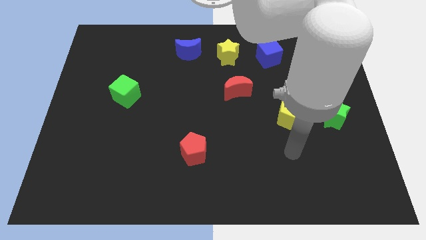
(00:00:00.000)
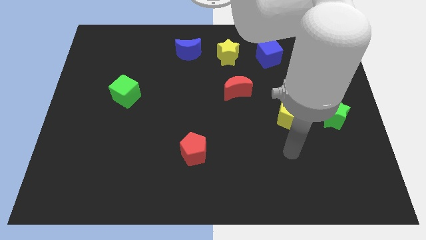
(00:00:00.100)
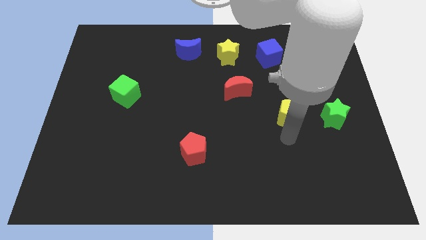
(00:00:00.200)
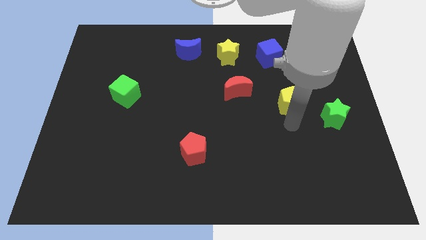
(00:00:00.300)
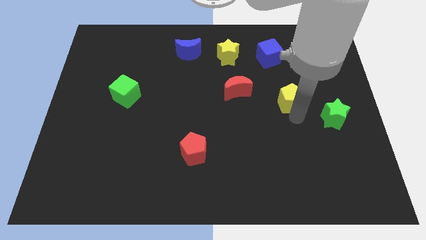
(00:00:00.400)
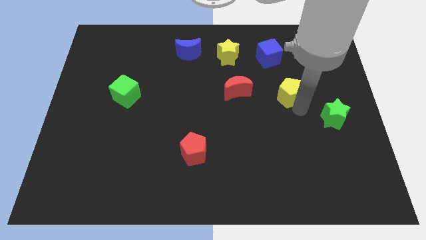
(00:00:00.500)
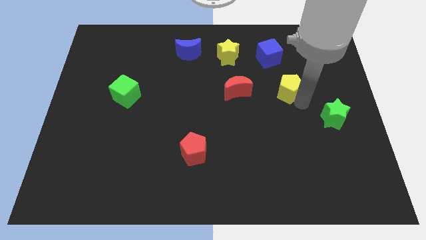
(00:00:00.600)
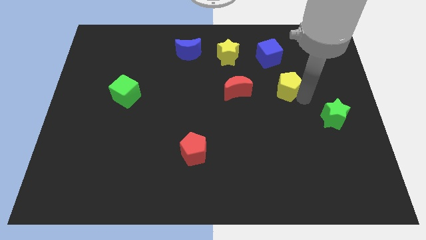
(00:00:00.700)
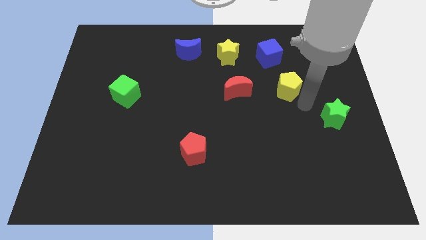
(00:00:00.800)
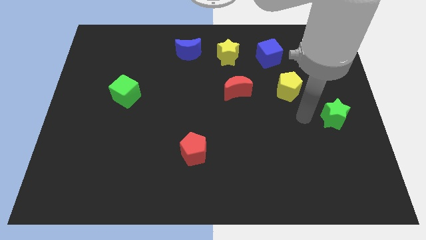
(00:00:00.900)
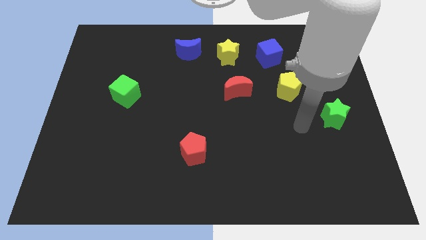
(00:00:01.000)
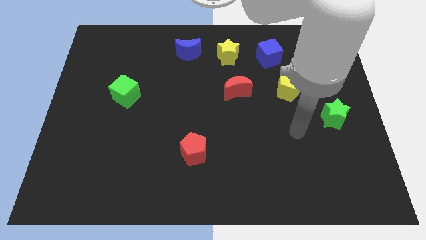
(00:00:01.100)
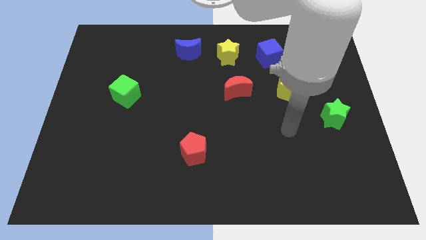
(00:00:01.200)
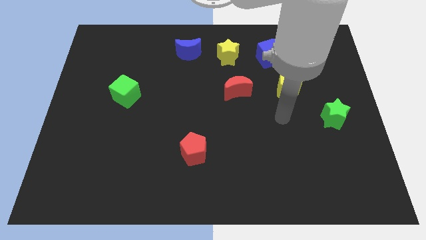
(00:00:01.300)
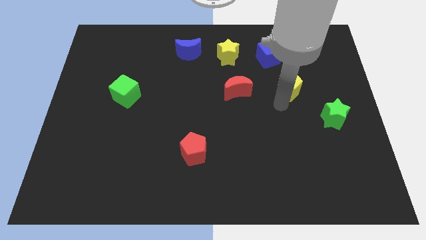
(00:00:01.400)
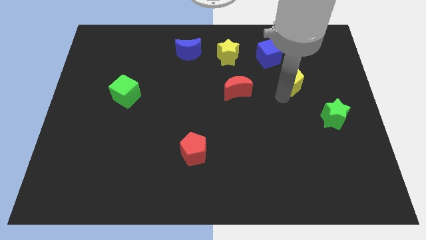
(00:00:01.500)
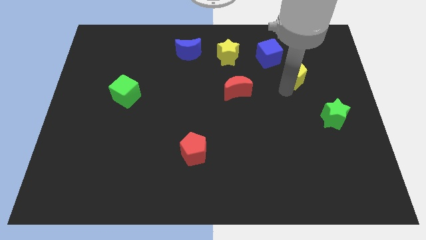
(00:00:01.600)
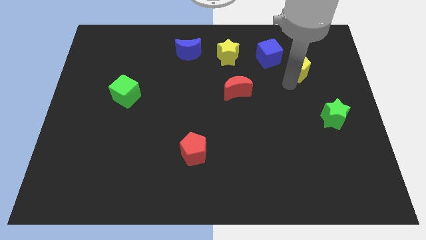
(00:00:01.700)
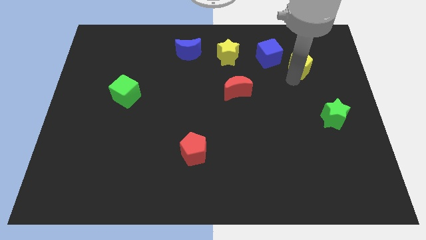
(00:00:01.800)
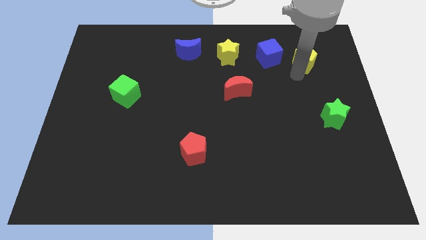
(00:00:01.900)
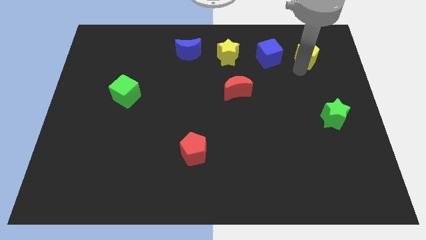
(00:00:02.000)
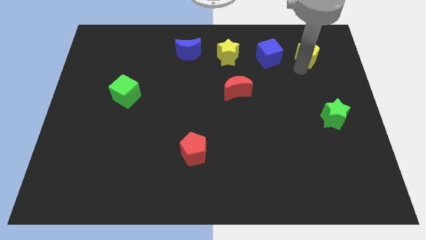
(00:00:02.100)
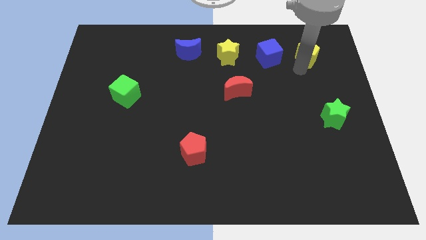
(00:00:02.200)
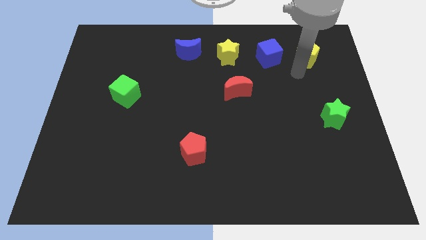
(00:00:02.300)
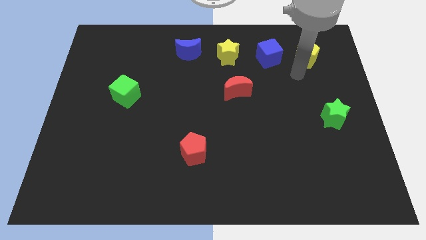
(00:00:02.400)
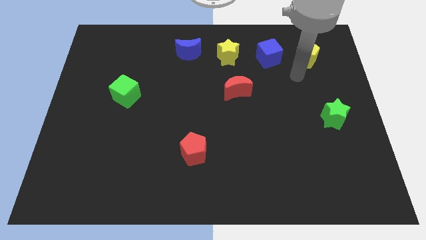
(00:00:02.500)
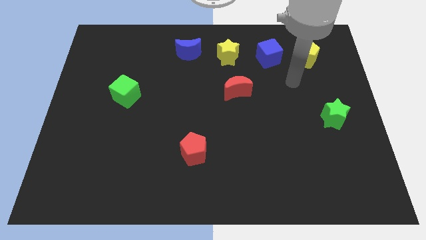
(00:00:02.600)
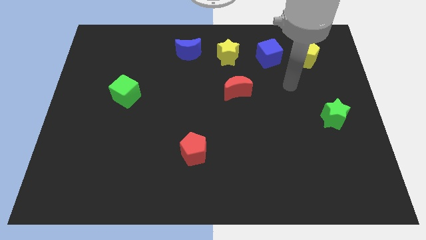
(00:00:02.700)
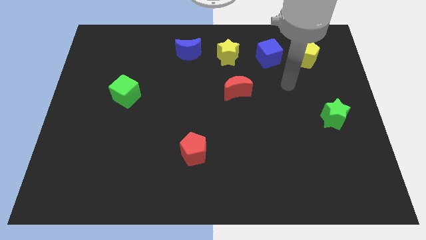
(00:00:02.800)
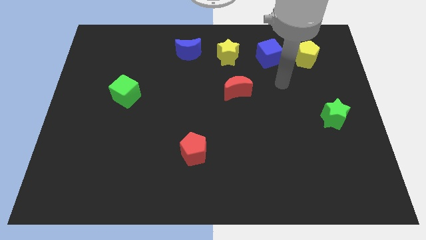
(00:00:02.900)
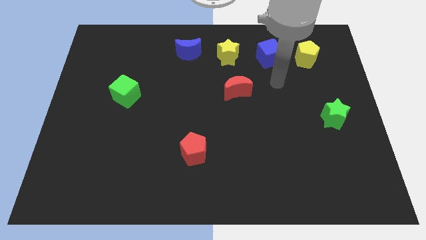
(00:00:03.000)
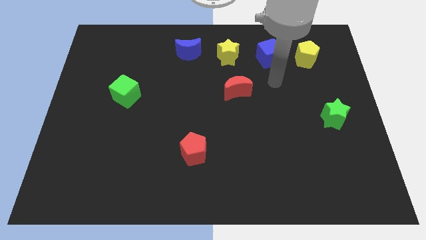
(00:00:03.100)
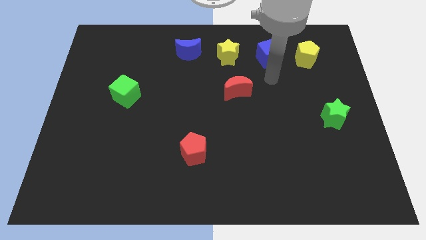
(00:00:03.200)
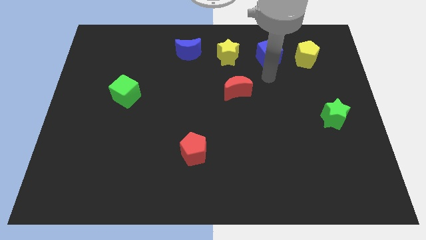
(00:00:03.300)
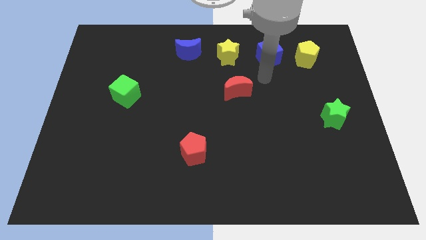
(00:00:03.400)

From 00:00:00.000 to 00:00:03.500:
push the yellow pentagon towards the top right of the board

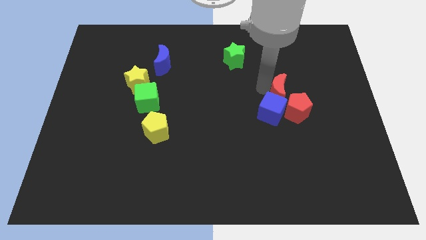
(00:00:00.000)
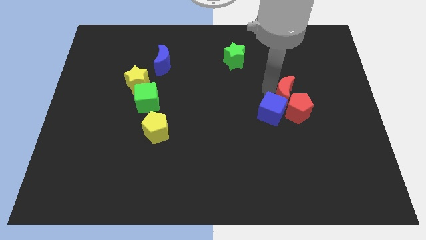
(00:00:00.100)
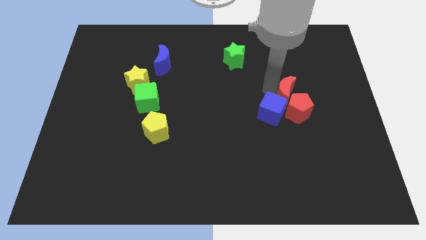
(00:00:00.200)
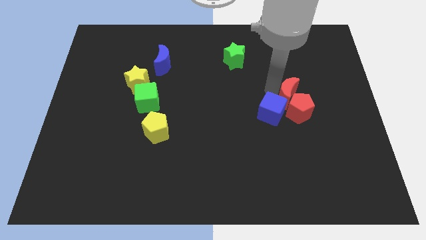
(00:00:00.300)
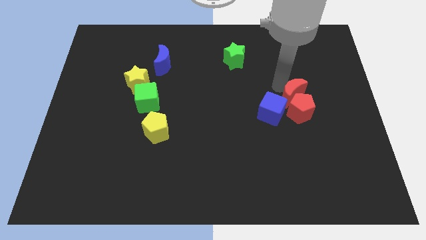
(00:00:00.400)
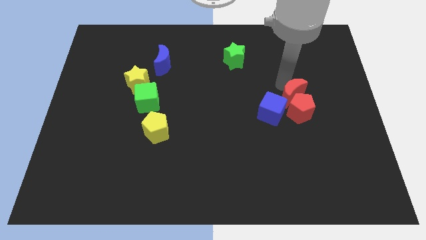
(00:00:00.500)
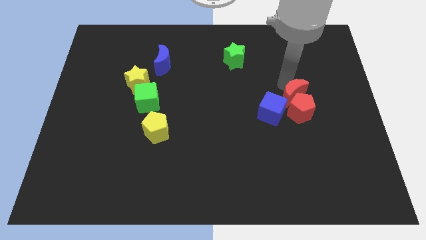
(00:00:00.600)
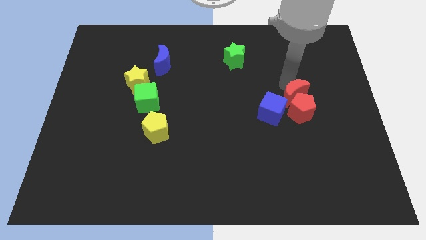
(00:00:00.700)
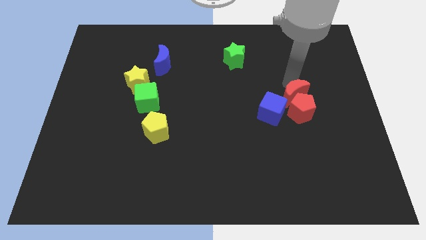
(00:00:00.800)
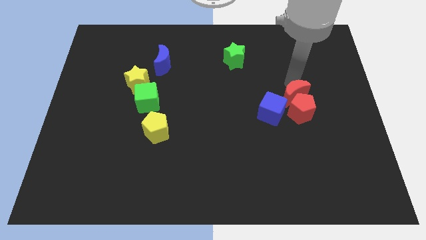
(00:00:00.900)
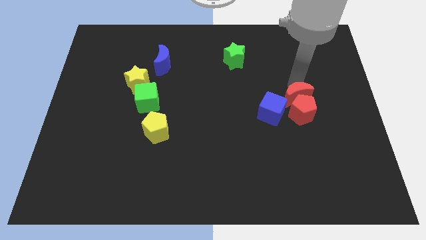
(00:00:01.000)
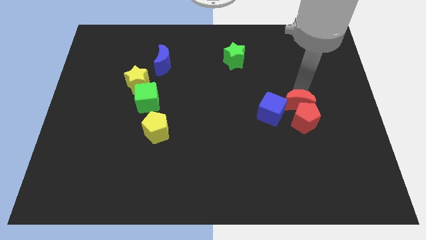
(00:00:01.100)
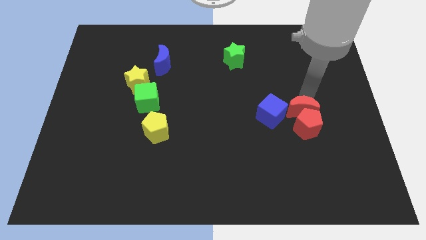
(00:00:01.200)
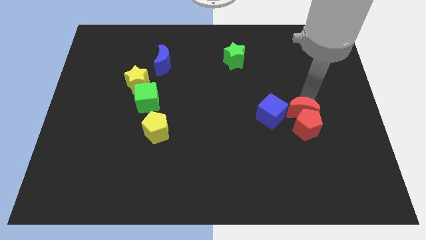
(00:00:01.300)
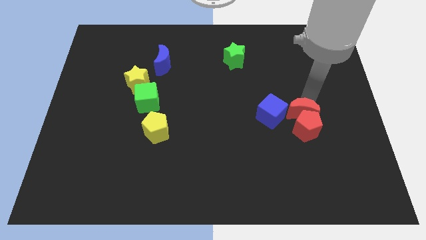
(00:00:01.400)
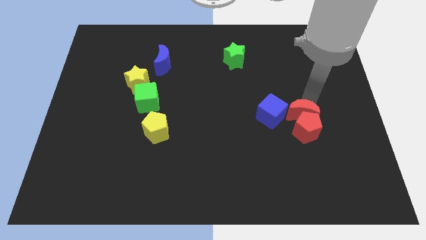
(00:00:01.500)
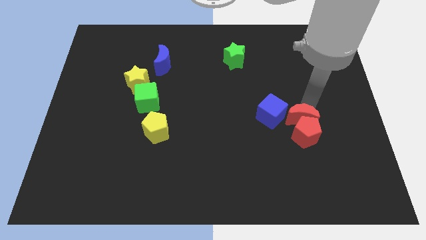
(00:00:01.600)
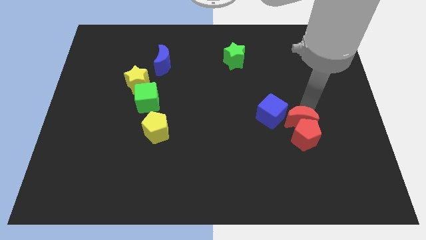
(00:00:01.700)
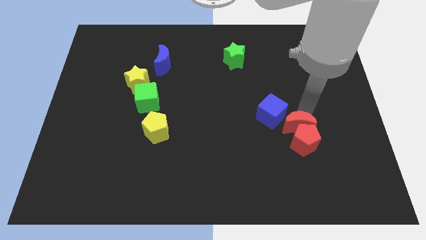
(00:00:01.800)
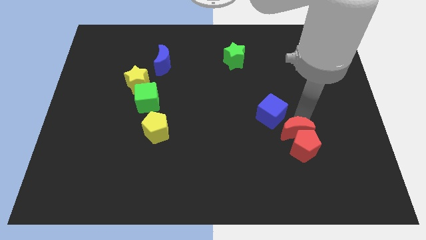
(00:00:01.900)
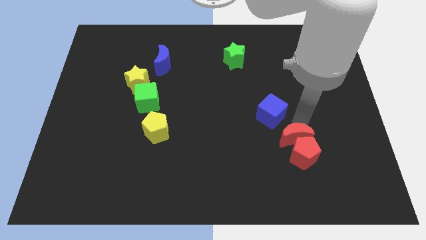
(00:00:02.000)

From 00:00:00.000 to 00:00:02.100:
separate red moon from blue cube

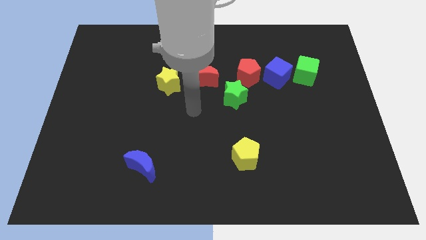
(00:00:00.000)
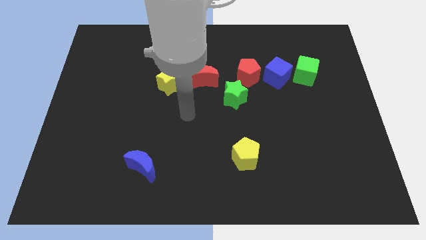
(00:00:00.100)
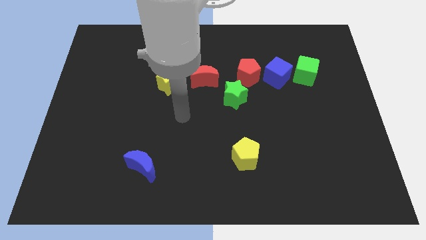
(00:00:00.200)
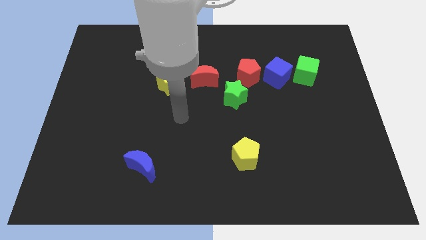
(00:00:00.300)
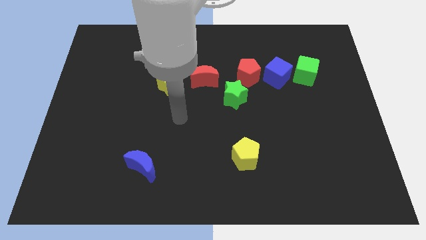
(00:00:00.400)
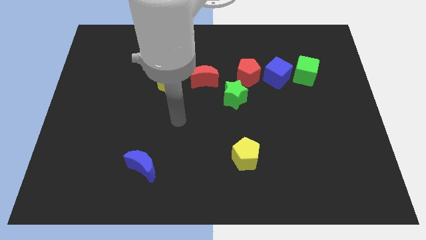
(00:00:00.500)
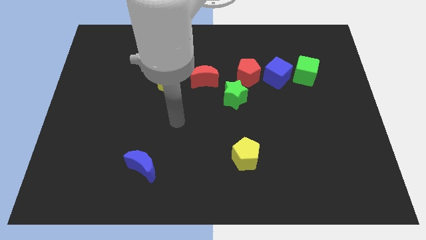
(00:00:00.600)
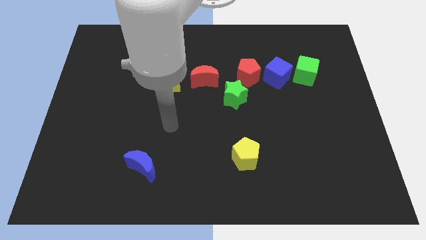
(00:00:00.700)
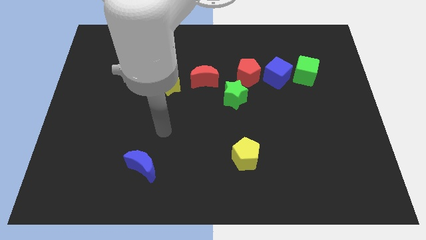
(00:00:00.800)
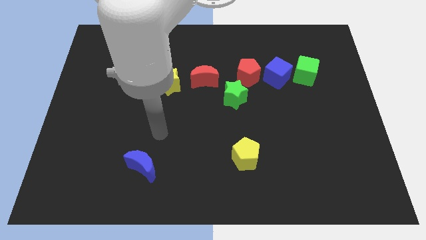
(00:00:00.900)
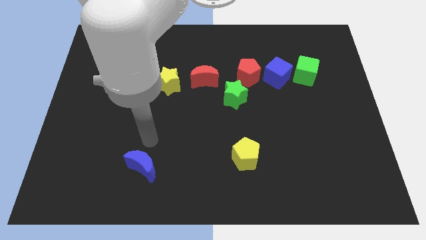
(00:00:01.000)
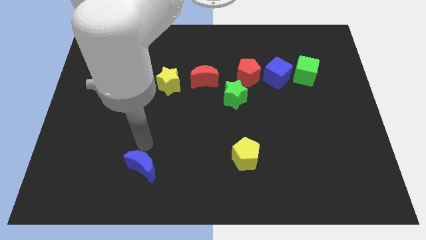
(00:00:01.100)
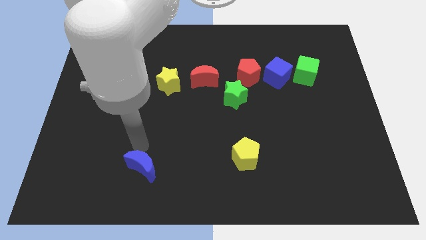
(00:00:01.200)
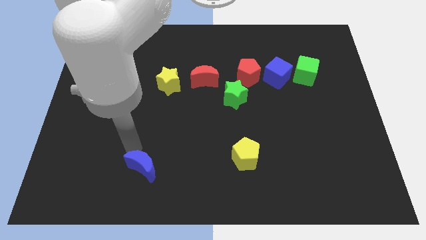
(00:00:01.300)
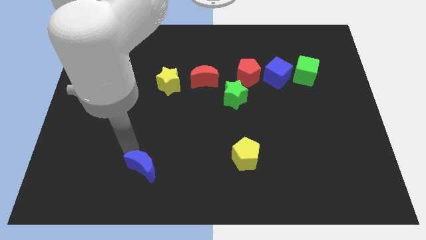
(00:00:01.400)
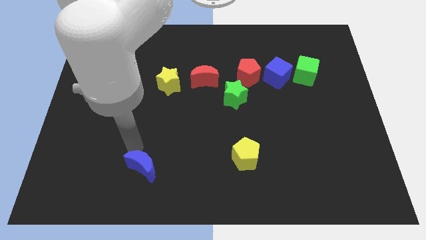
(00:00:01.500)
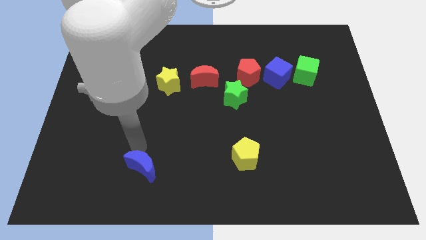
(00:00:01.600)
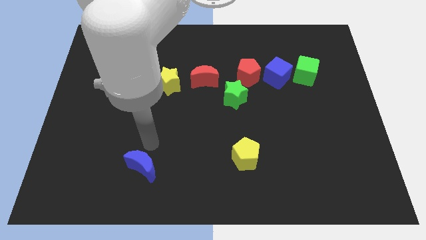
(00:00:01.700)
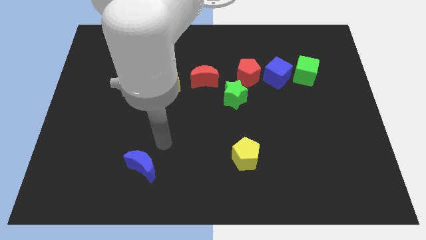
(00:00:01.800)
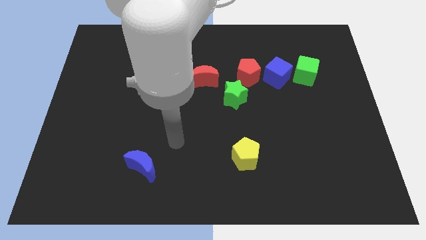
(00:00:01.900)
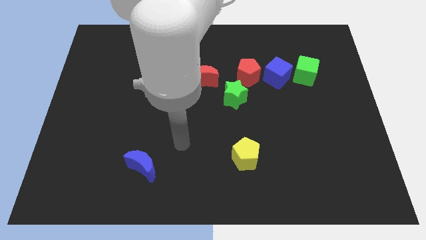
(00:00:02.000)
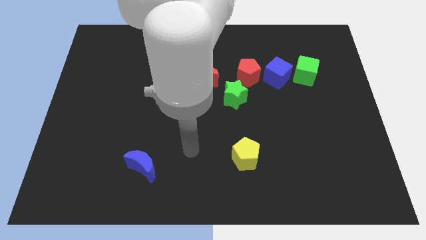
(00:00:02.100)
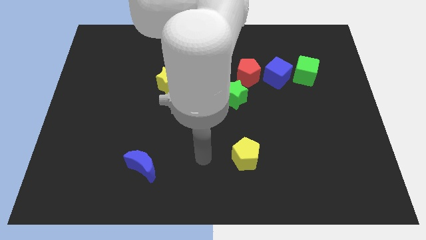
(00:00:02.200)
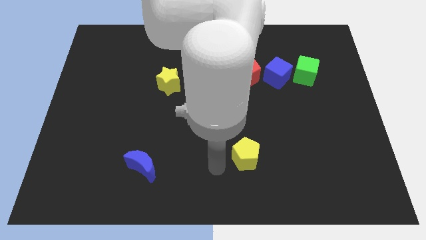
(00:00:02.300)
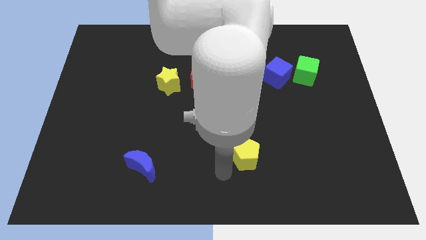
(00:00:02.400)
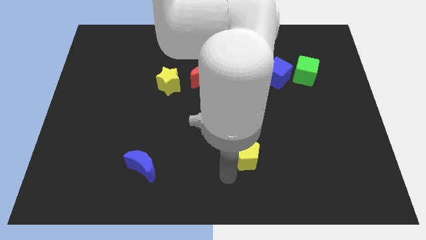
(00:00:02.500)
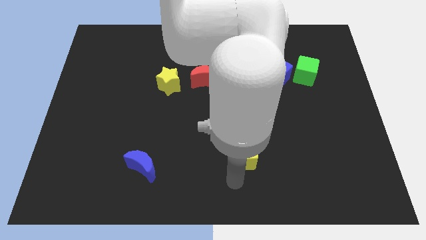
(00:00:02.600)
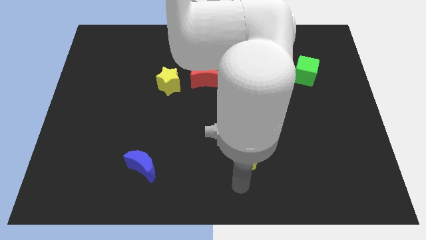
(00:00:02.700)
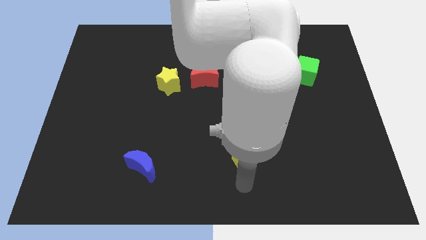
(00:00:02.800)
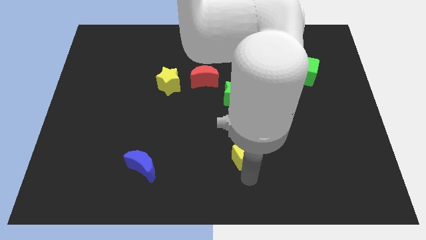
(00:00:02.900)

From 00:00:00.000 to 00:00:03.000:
move your arm to the bottom of the yellow pentagon

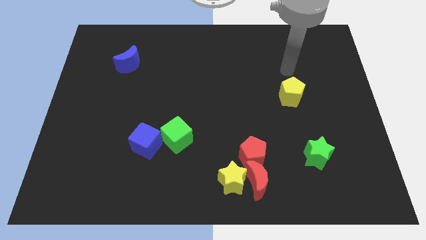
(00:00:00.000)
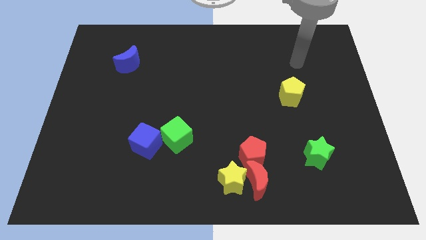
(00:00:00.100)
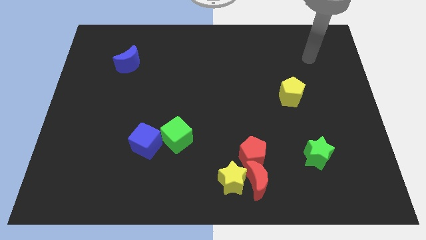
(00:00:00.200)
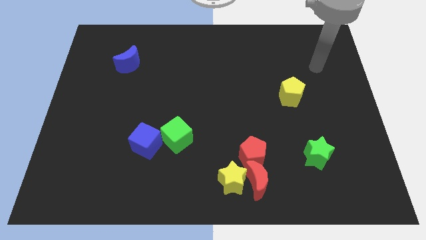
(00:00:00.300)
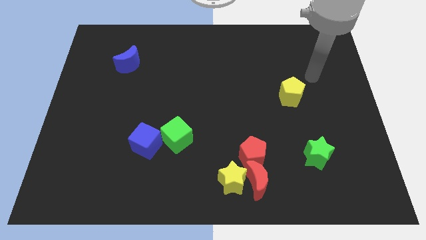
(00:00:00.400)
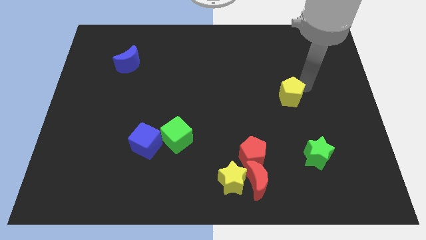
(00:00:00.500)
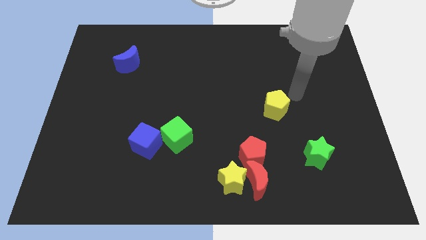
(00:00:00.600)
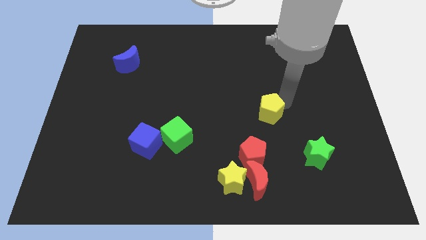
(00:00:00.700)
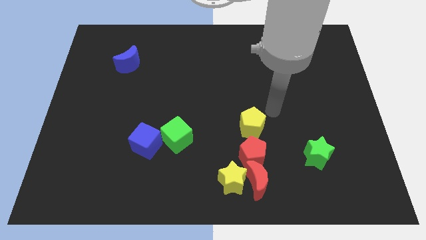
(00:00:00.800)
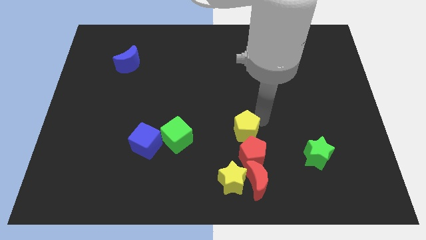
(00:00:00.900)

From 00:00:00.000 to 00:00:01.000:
place yellow pentagon above red pentagon
